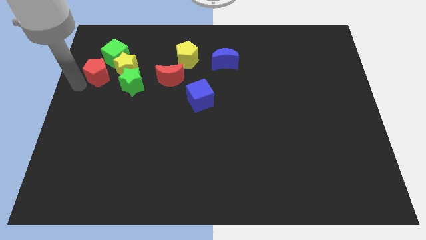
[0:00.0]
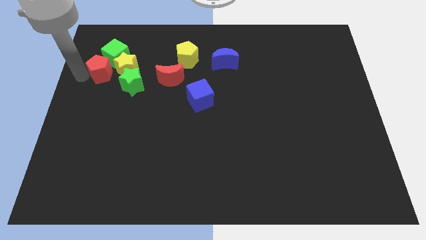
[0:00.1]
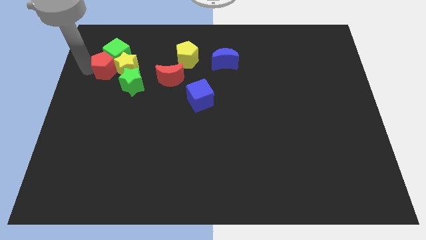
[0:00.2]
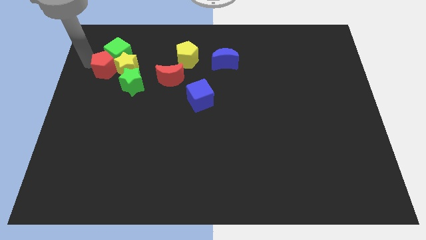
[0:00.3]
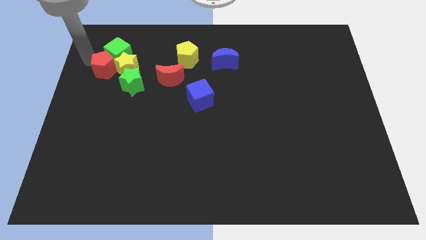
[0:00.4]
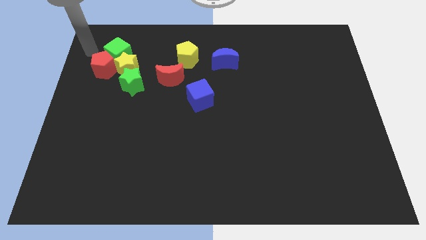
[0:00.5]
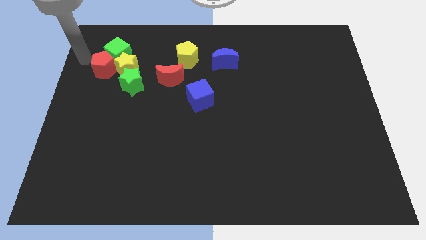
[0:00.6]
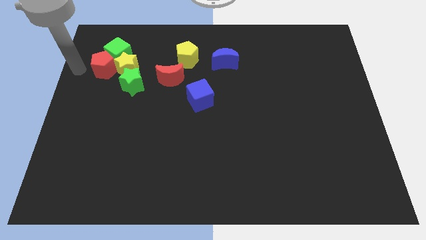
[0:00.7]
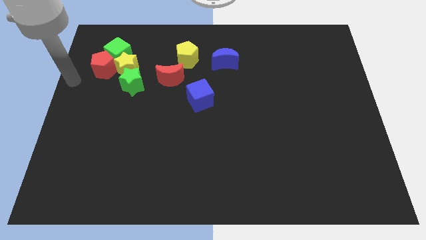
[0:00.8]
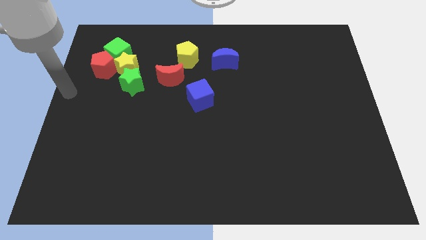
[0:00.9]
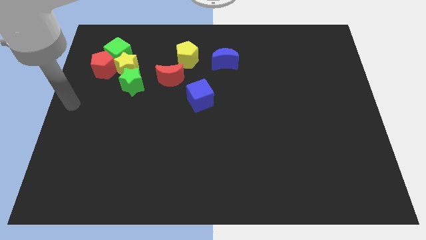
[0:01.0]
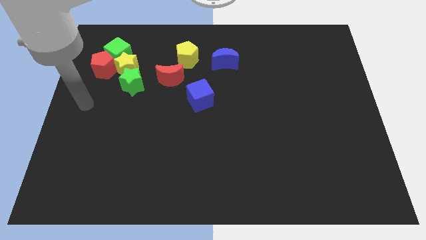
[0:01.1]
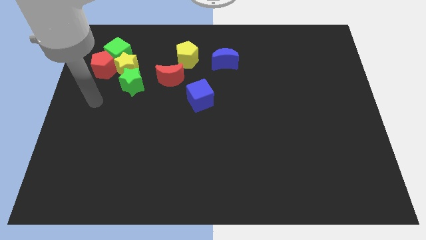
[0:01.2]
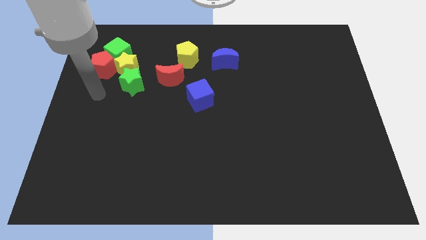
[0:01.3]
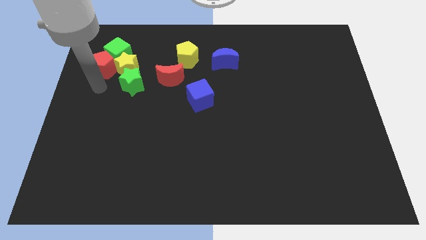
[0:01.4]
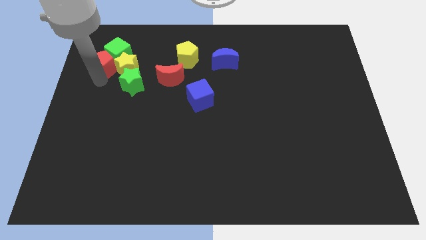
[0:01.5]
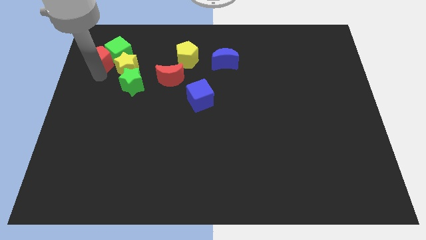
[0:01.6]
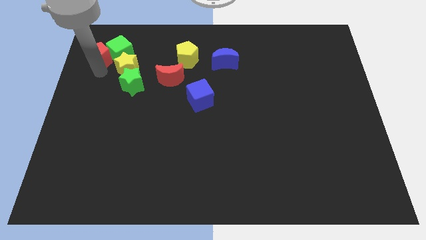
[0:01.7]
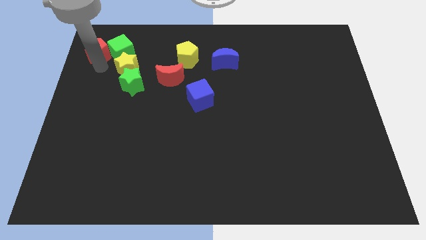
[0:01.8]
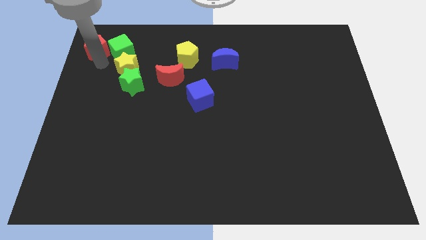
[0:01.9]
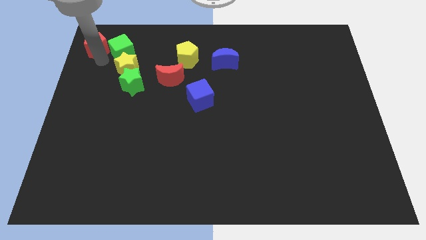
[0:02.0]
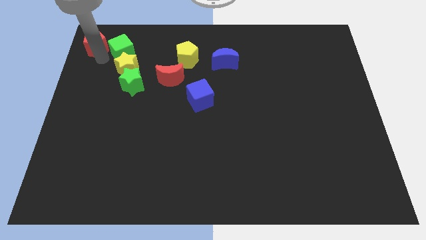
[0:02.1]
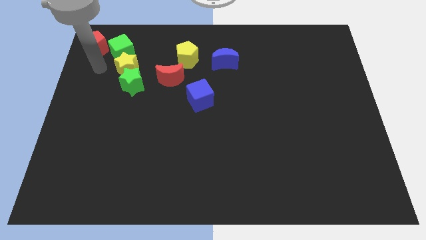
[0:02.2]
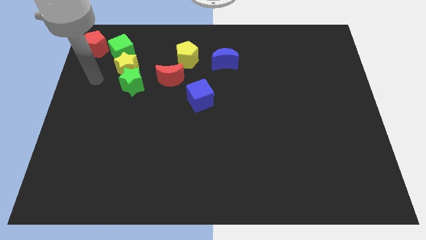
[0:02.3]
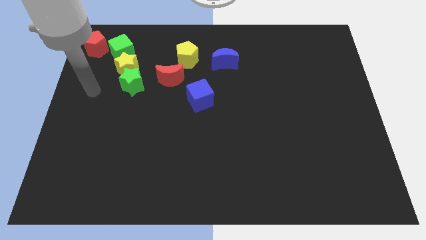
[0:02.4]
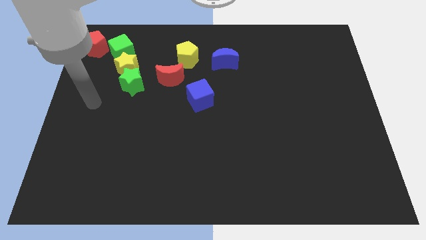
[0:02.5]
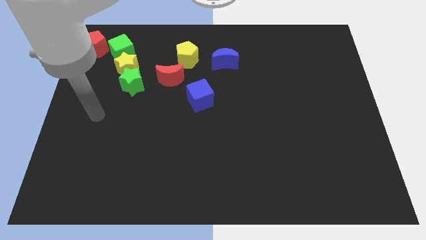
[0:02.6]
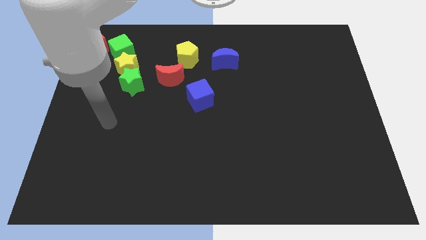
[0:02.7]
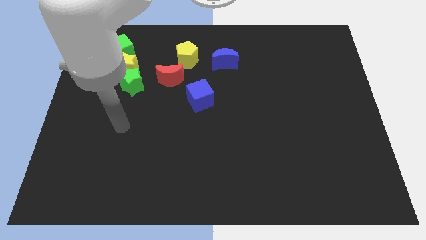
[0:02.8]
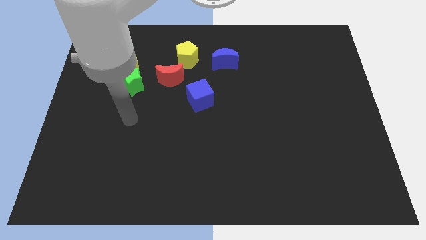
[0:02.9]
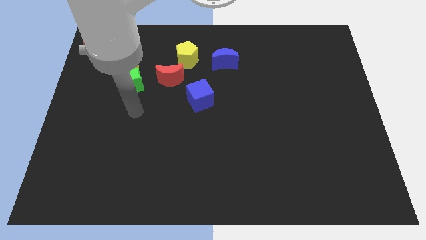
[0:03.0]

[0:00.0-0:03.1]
place the red pentagon to the top left of the green cube

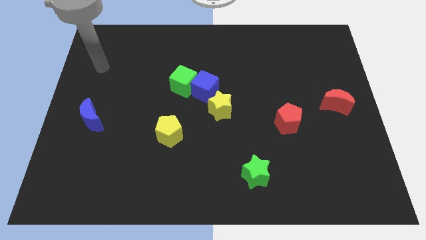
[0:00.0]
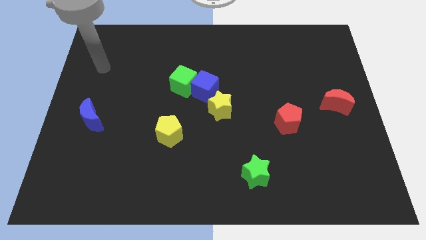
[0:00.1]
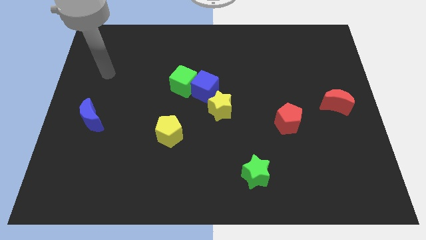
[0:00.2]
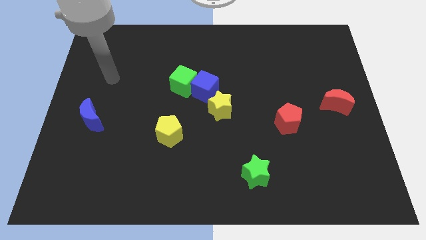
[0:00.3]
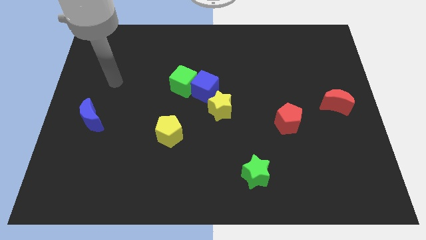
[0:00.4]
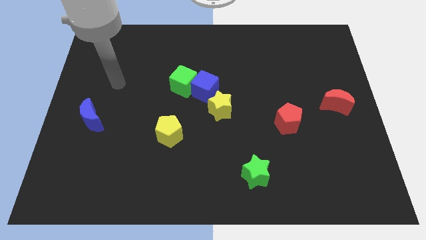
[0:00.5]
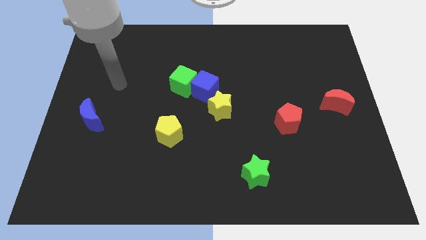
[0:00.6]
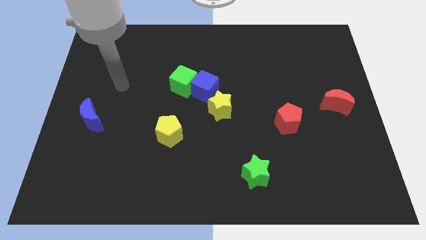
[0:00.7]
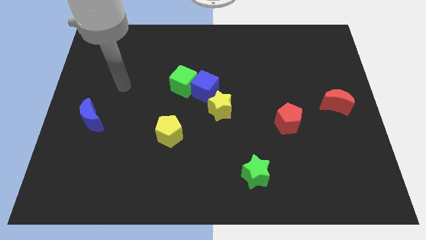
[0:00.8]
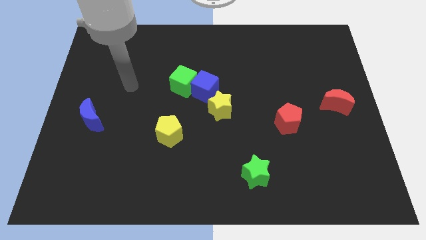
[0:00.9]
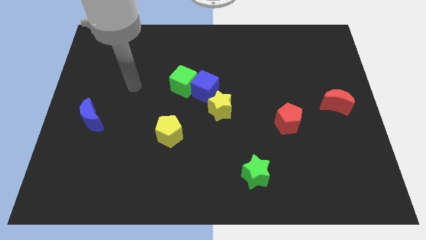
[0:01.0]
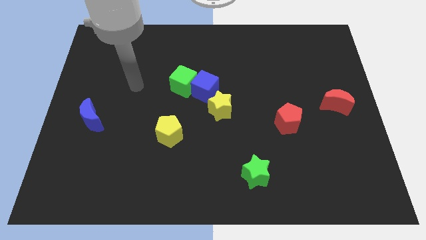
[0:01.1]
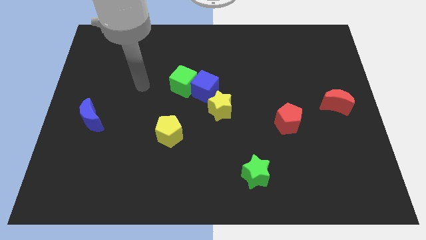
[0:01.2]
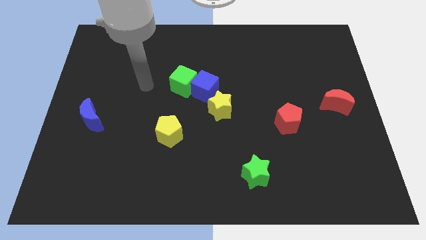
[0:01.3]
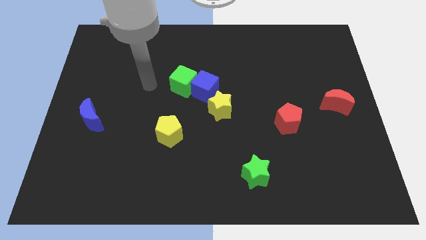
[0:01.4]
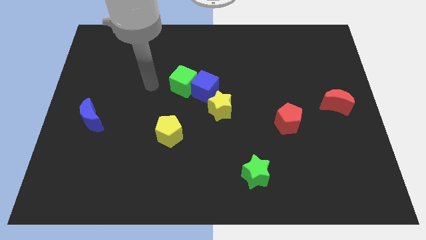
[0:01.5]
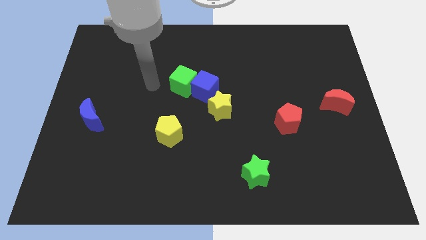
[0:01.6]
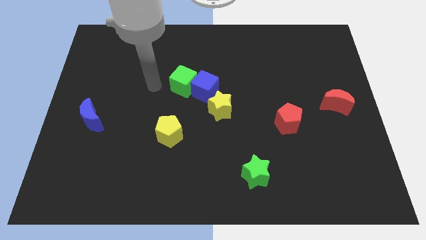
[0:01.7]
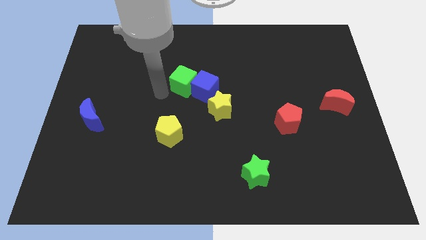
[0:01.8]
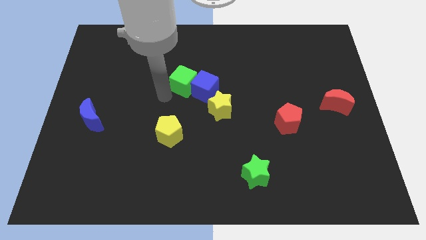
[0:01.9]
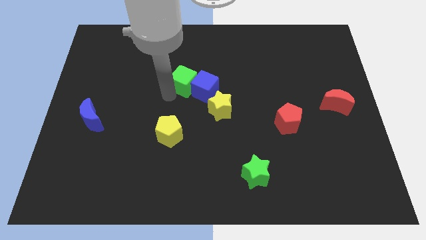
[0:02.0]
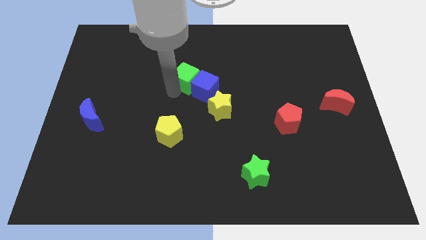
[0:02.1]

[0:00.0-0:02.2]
tap the blue cube

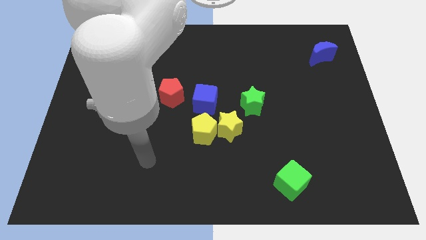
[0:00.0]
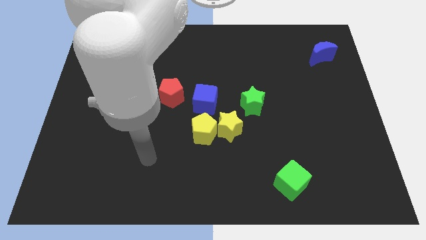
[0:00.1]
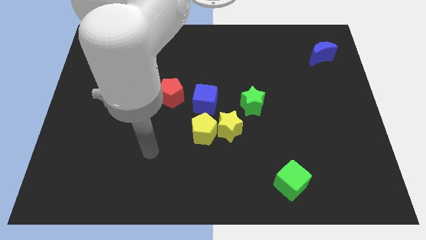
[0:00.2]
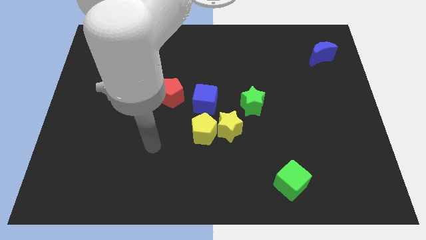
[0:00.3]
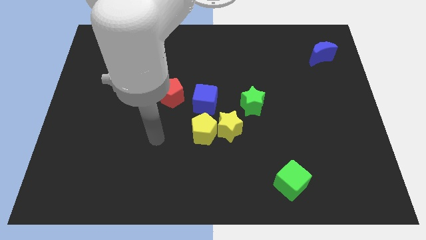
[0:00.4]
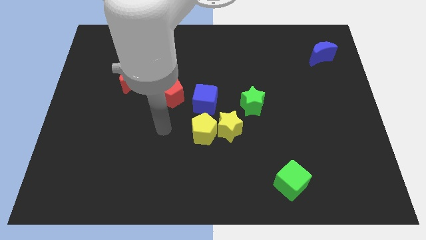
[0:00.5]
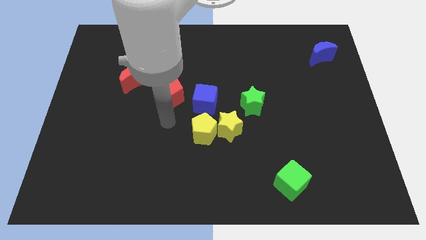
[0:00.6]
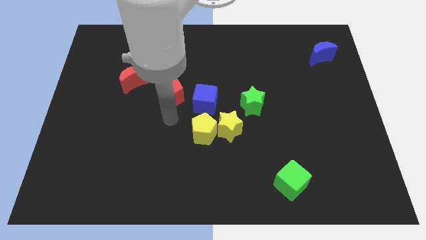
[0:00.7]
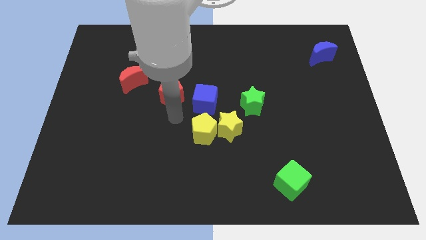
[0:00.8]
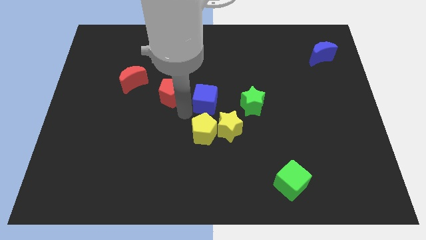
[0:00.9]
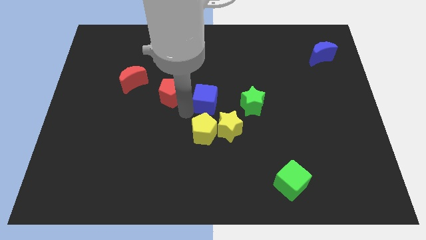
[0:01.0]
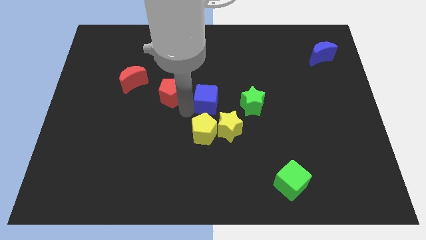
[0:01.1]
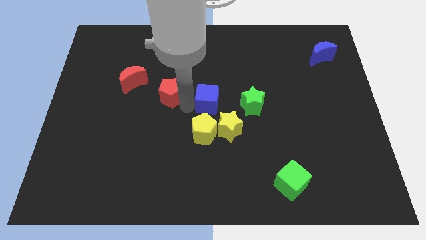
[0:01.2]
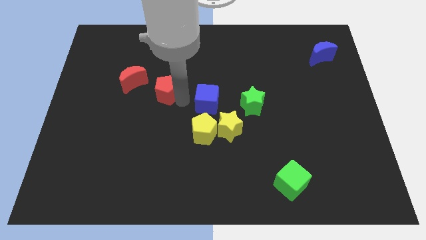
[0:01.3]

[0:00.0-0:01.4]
push the blue cube slightly

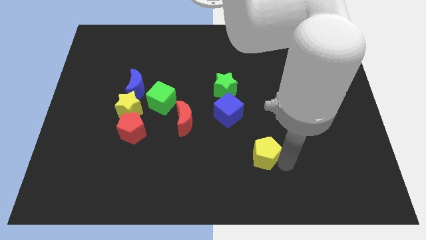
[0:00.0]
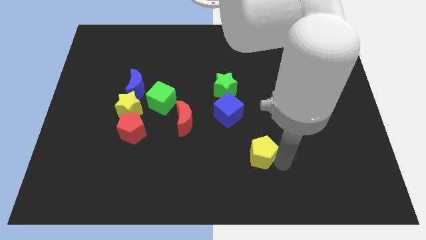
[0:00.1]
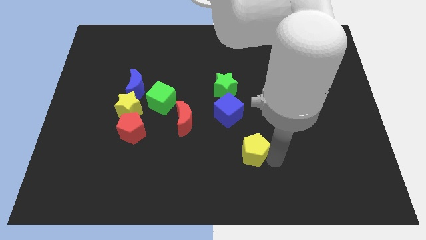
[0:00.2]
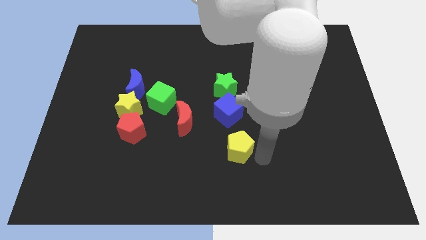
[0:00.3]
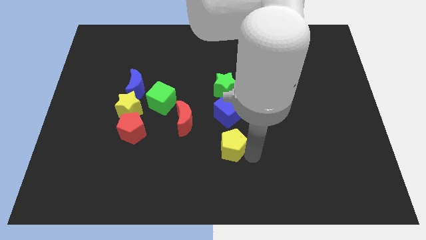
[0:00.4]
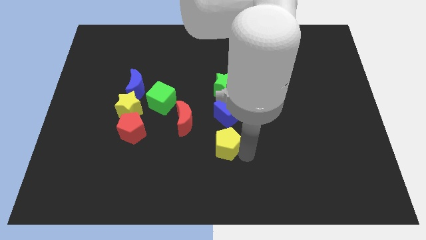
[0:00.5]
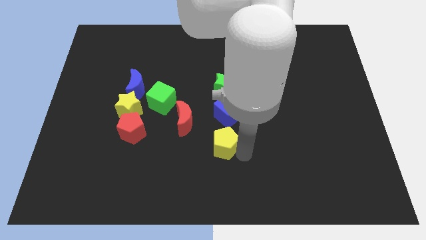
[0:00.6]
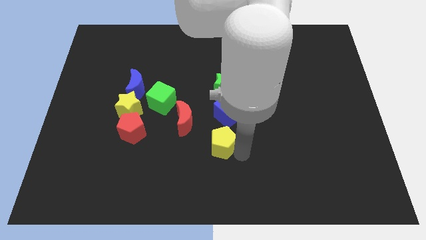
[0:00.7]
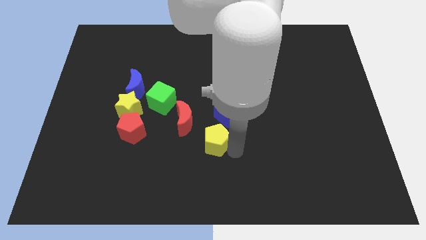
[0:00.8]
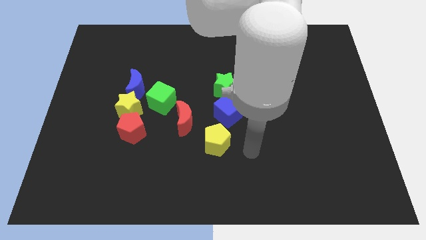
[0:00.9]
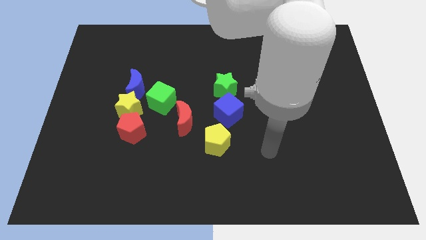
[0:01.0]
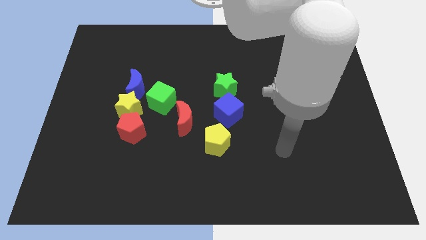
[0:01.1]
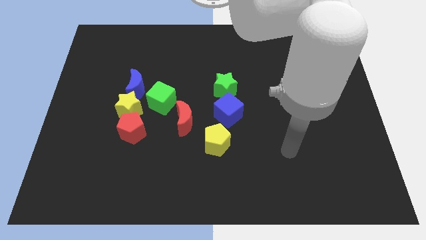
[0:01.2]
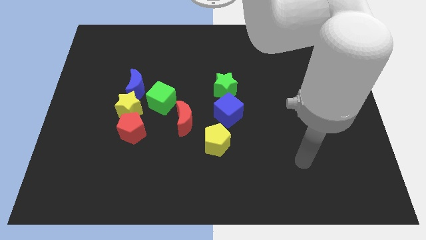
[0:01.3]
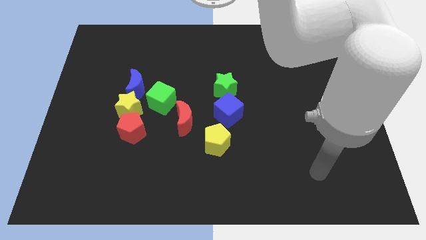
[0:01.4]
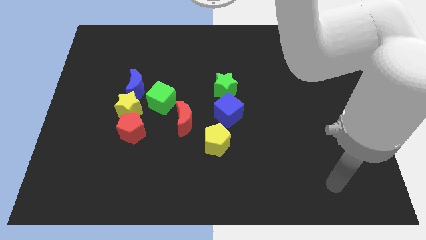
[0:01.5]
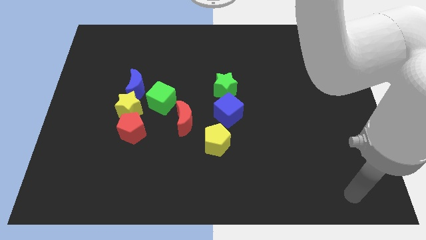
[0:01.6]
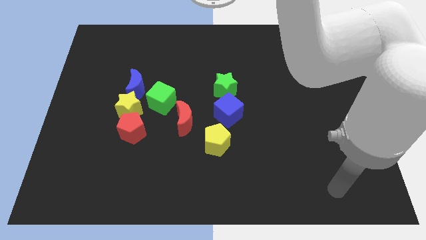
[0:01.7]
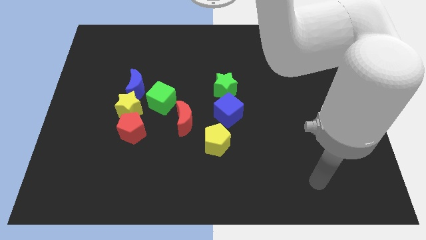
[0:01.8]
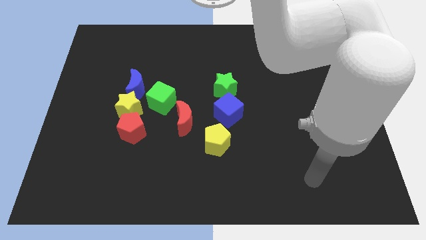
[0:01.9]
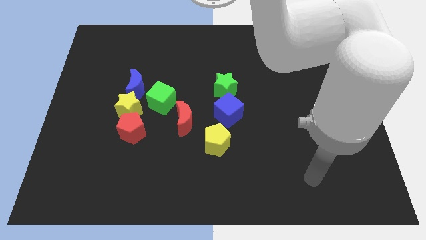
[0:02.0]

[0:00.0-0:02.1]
move the yellow pentagon to the bottom of the blue cube

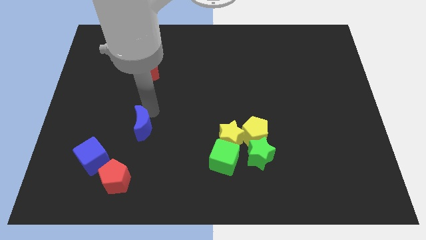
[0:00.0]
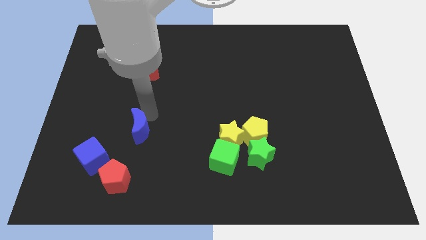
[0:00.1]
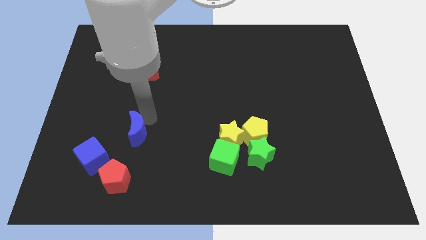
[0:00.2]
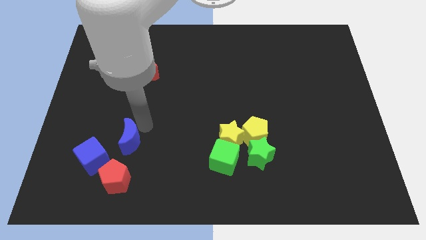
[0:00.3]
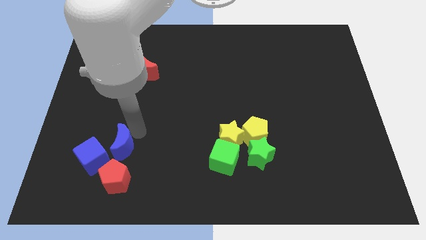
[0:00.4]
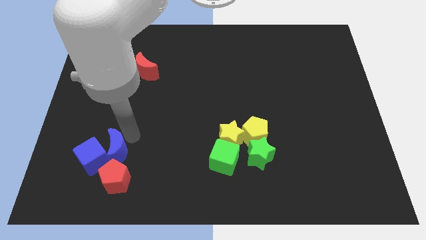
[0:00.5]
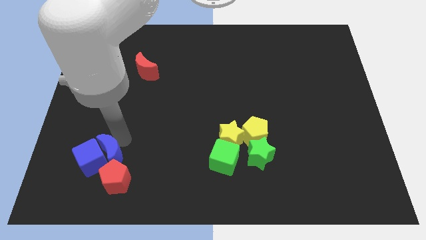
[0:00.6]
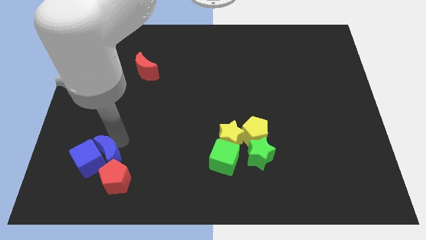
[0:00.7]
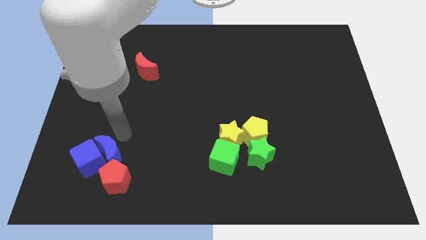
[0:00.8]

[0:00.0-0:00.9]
place the blue crescent to the right of the blue cube
